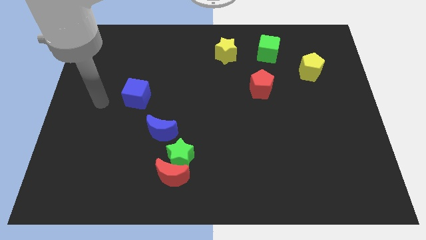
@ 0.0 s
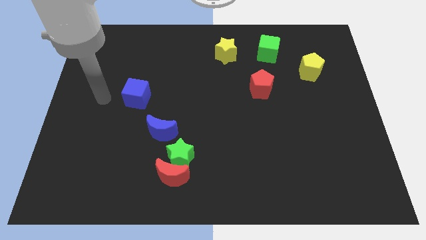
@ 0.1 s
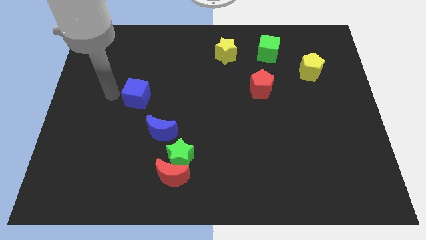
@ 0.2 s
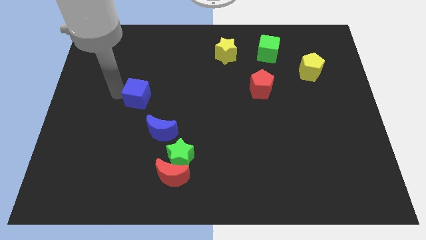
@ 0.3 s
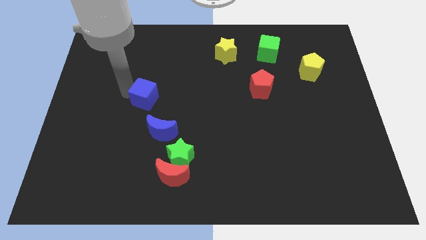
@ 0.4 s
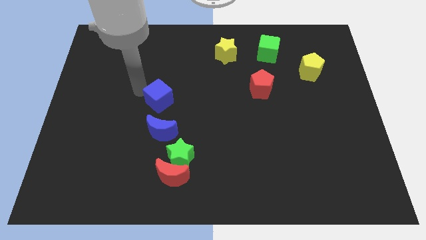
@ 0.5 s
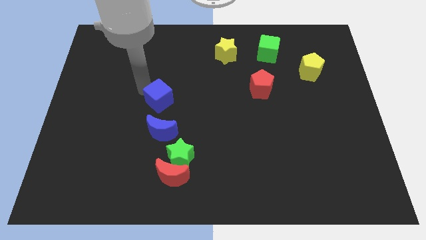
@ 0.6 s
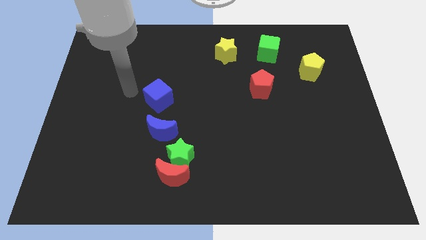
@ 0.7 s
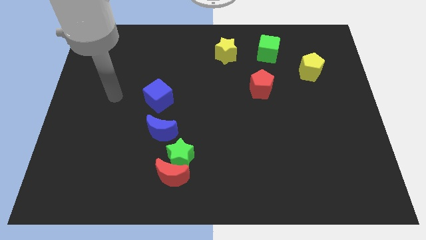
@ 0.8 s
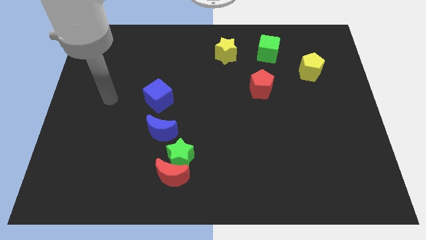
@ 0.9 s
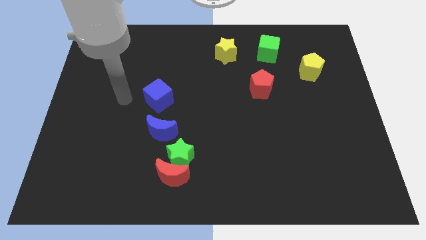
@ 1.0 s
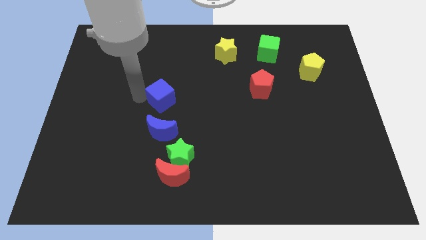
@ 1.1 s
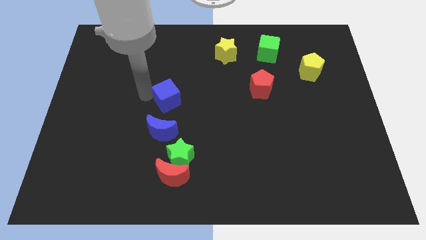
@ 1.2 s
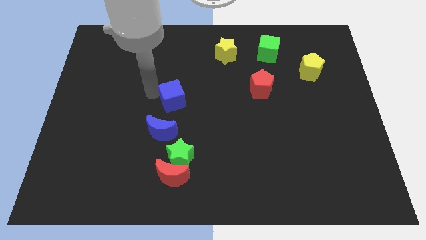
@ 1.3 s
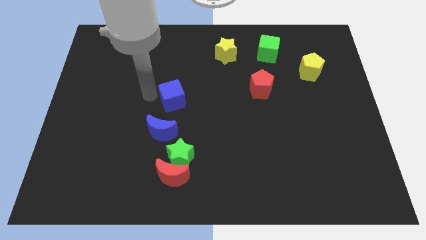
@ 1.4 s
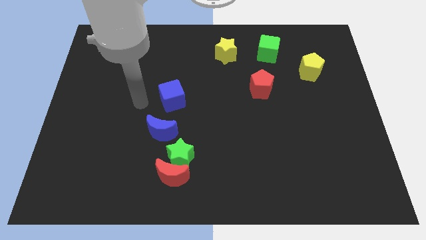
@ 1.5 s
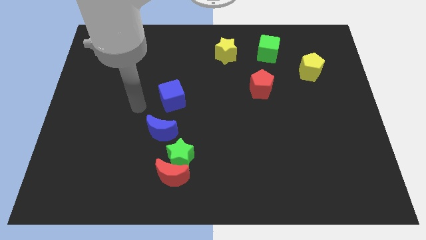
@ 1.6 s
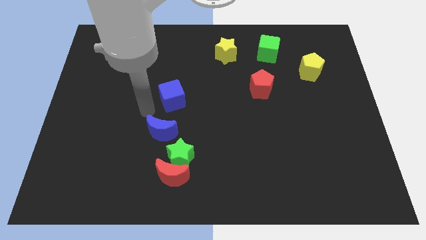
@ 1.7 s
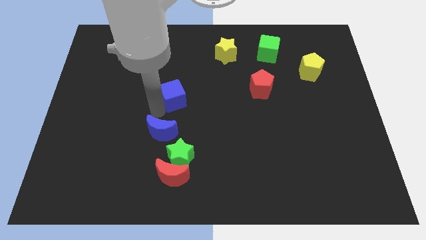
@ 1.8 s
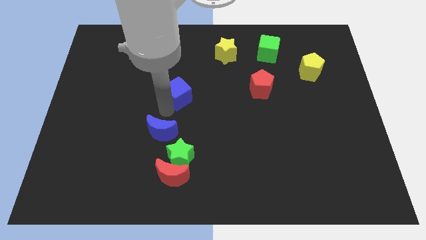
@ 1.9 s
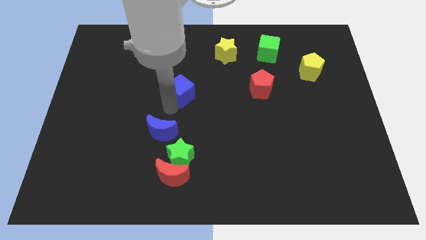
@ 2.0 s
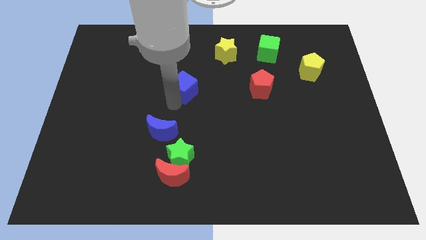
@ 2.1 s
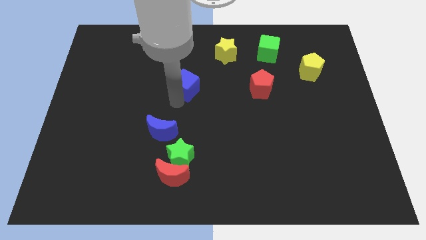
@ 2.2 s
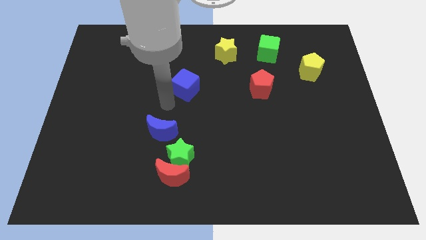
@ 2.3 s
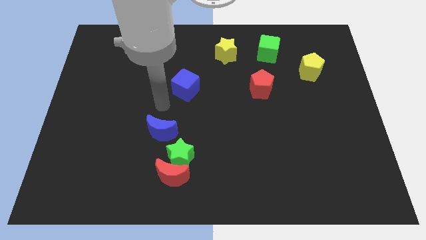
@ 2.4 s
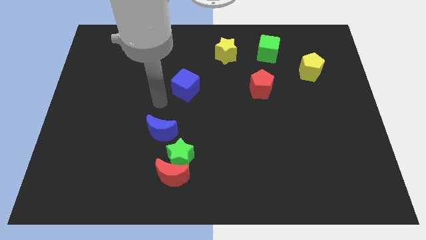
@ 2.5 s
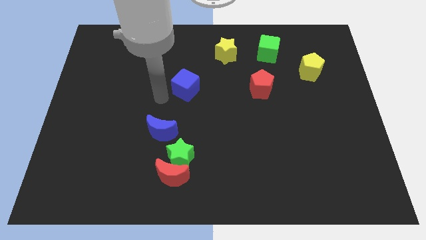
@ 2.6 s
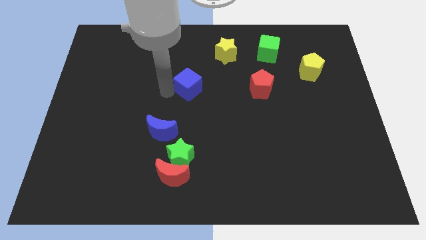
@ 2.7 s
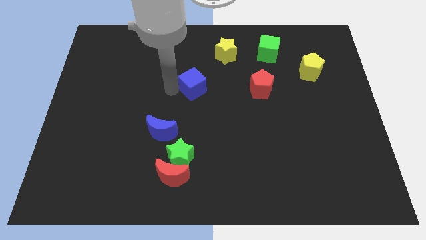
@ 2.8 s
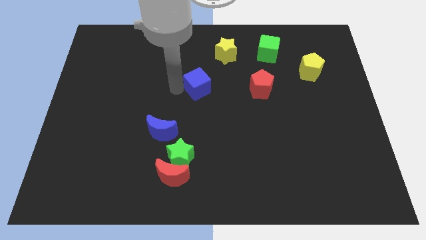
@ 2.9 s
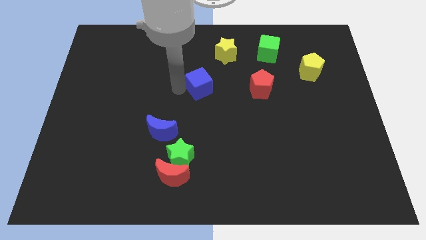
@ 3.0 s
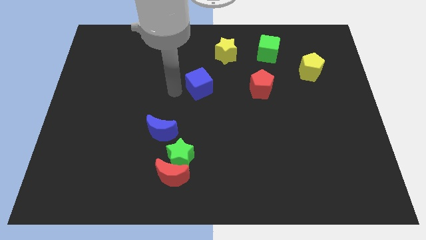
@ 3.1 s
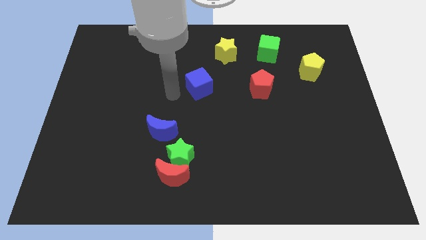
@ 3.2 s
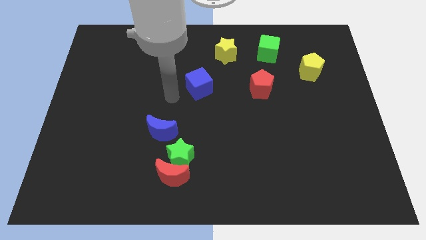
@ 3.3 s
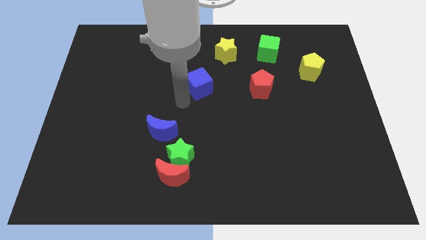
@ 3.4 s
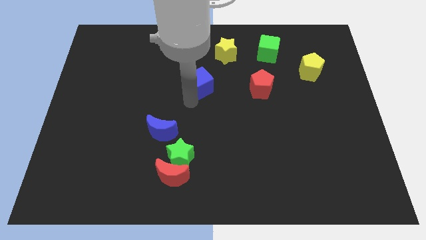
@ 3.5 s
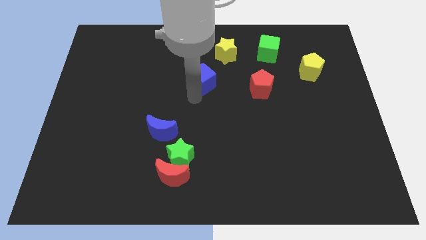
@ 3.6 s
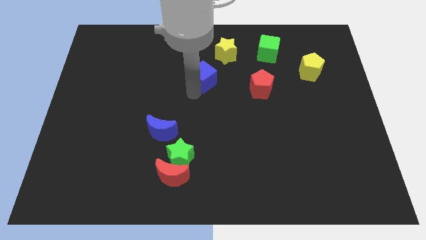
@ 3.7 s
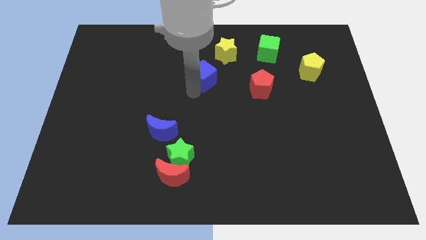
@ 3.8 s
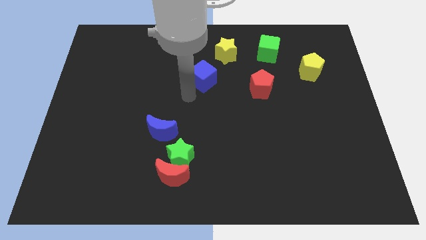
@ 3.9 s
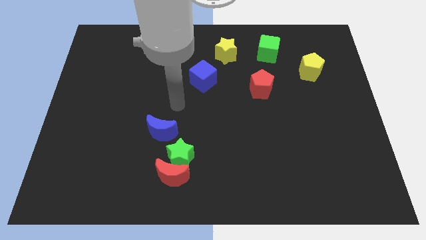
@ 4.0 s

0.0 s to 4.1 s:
move the blue cube to the bottom left of the yellow star

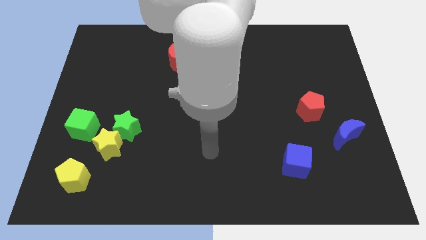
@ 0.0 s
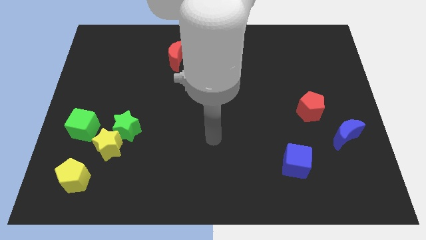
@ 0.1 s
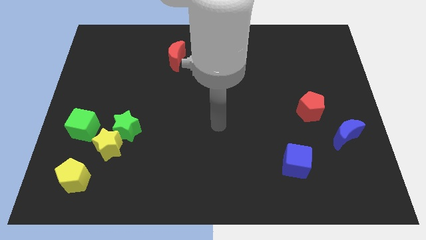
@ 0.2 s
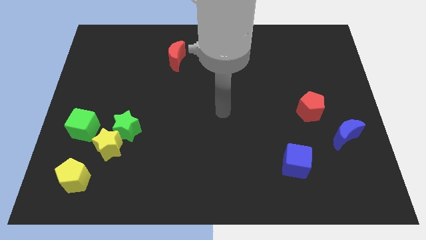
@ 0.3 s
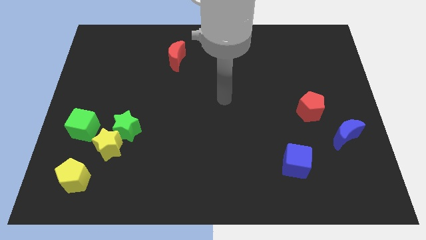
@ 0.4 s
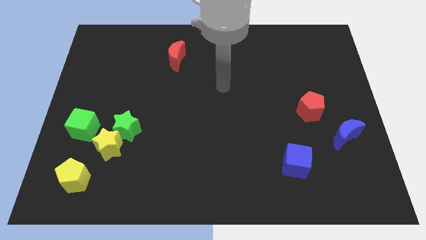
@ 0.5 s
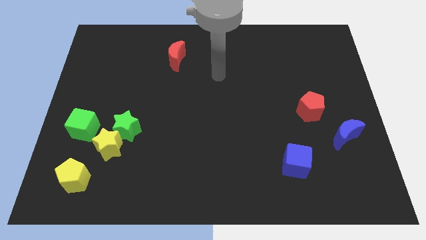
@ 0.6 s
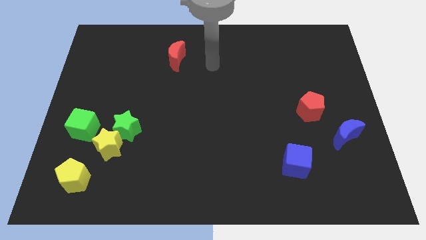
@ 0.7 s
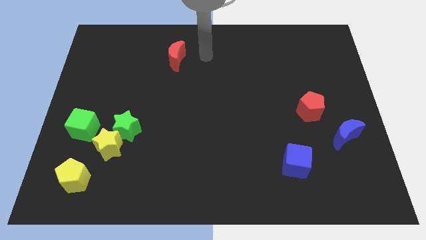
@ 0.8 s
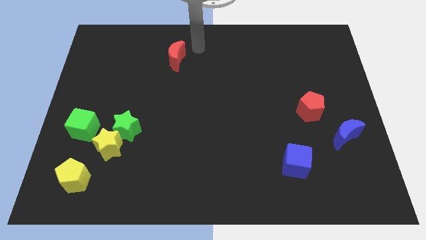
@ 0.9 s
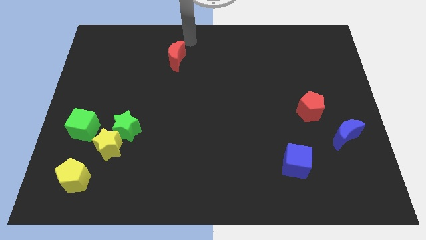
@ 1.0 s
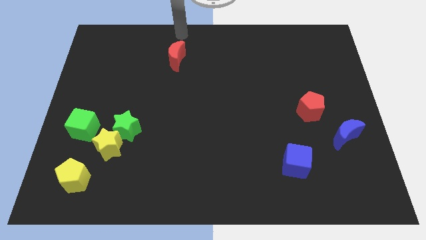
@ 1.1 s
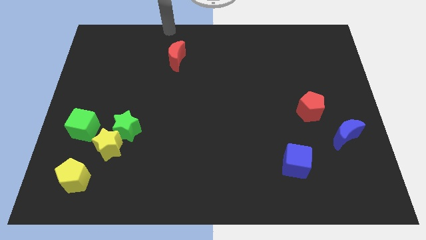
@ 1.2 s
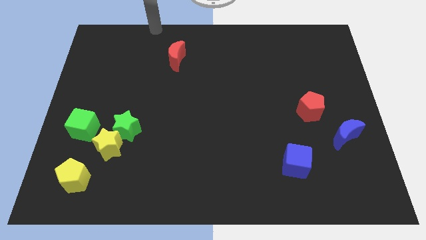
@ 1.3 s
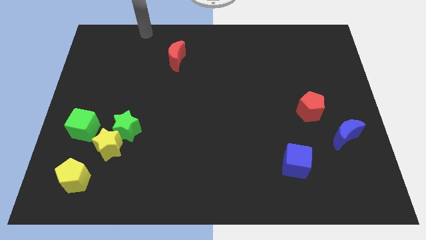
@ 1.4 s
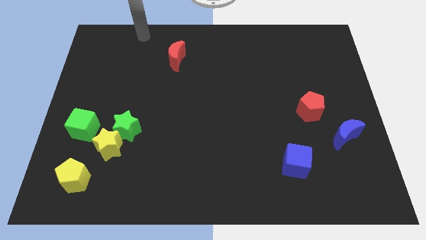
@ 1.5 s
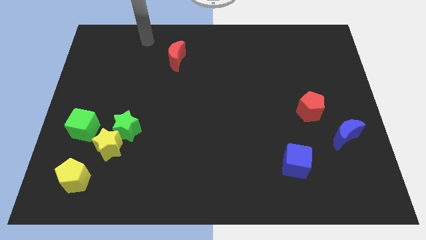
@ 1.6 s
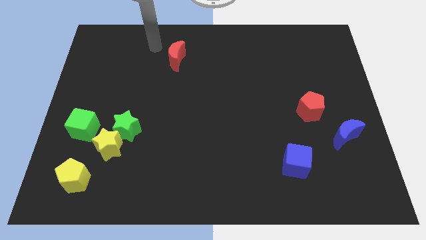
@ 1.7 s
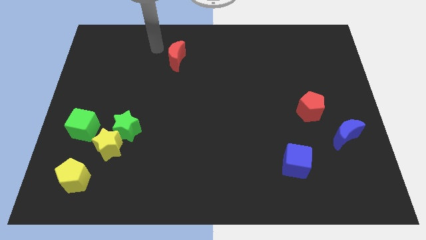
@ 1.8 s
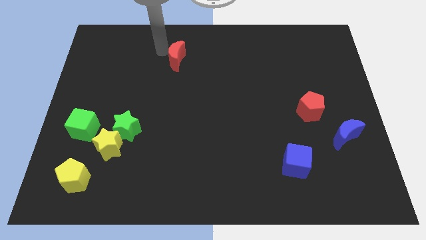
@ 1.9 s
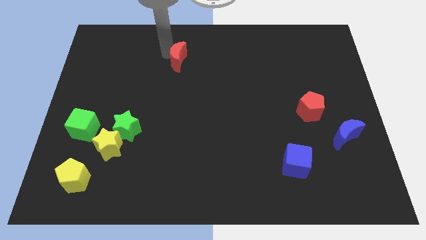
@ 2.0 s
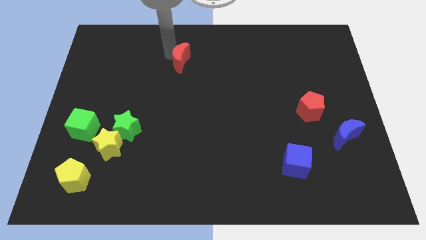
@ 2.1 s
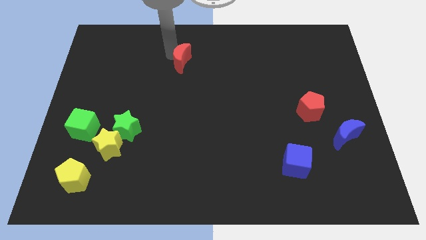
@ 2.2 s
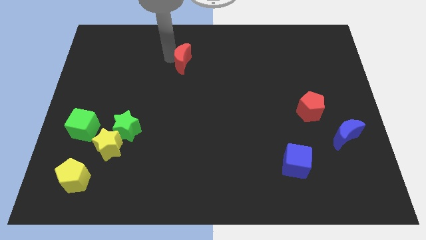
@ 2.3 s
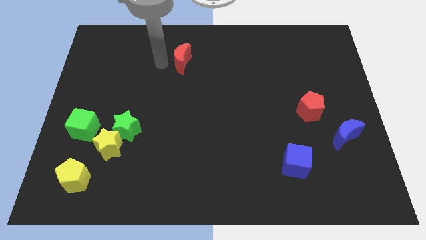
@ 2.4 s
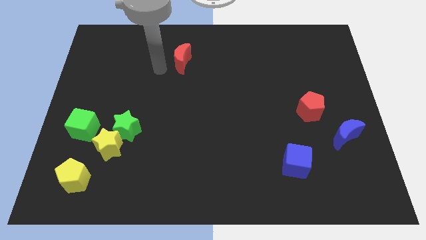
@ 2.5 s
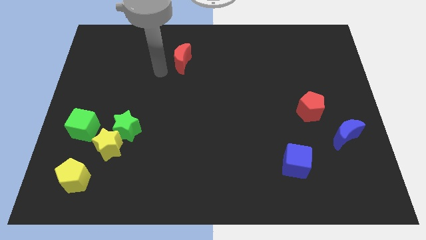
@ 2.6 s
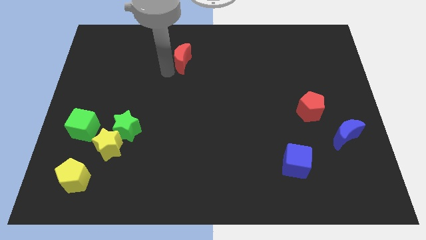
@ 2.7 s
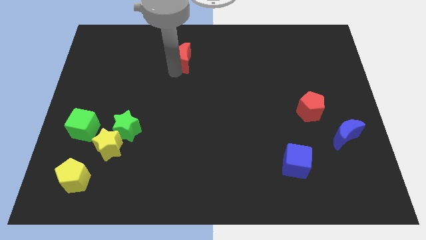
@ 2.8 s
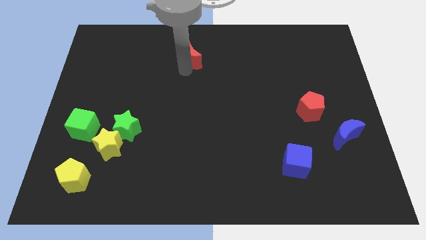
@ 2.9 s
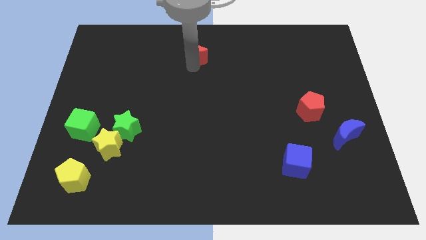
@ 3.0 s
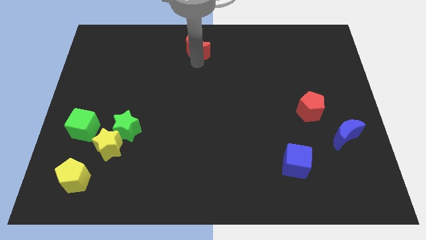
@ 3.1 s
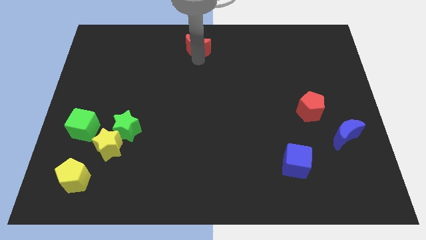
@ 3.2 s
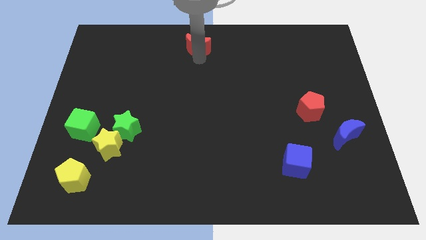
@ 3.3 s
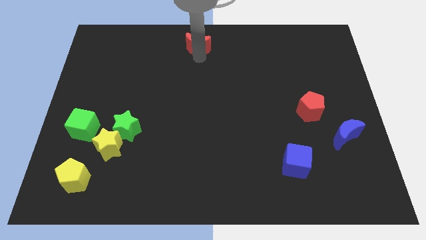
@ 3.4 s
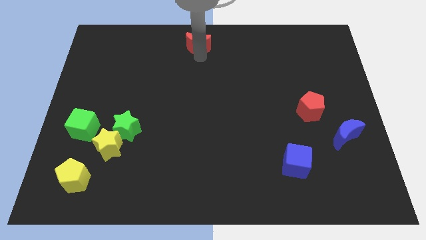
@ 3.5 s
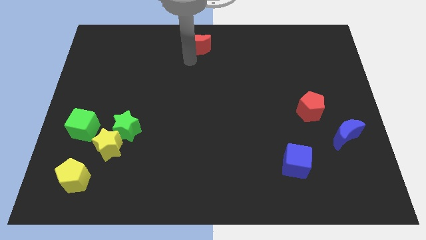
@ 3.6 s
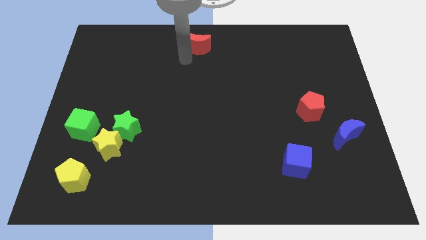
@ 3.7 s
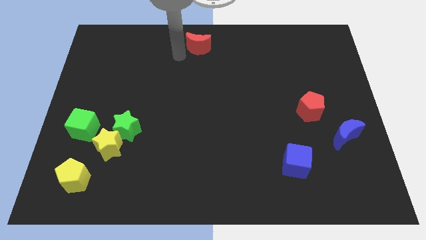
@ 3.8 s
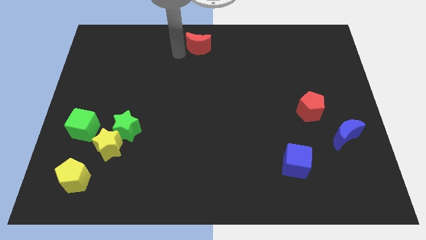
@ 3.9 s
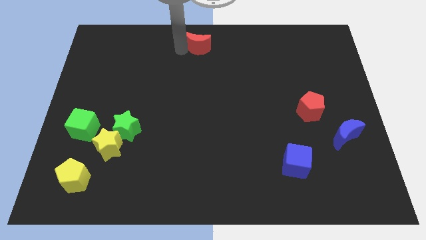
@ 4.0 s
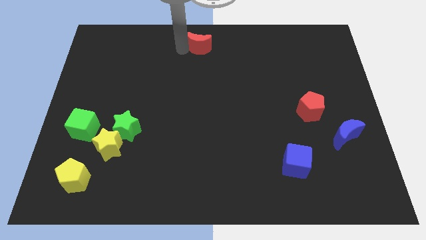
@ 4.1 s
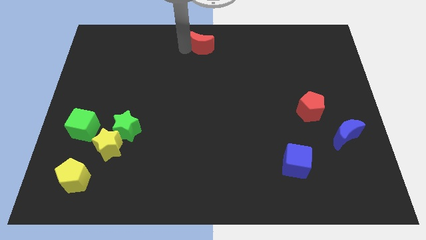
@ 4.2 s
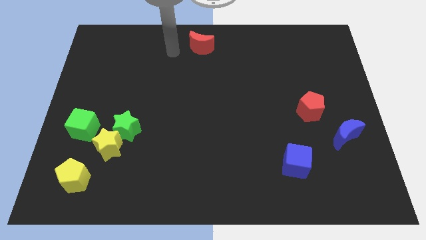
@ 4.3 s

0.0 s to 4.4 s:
move the red crescent to the top center of the board

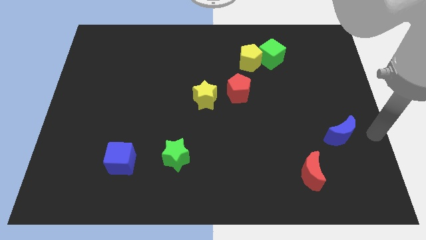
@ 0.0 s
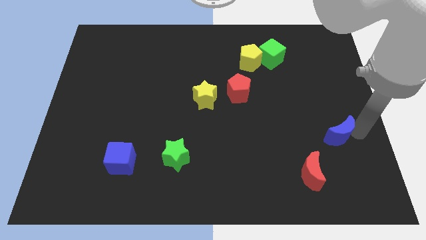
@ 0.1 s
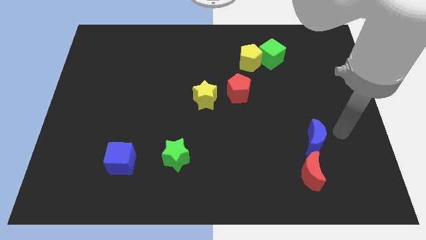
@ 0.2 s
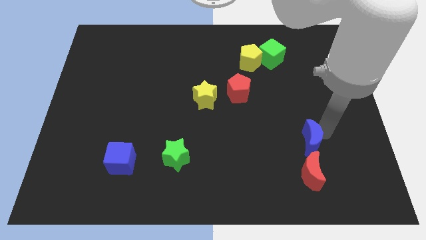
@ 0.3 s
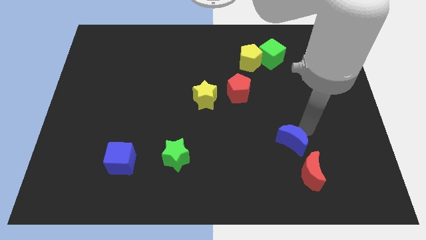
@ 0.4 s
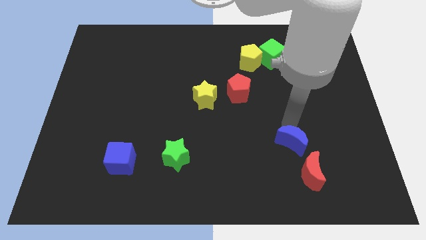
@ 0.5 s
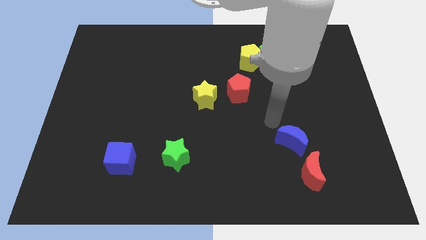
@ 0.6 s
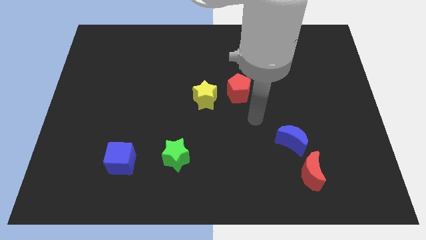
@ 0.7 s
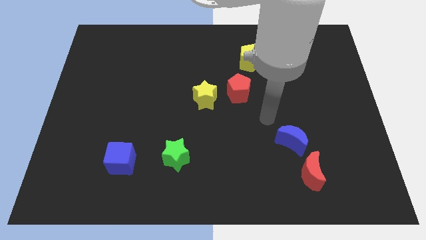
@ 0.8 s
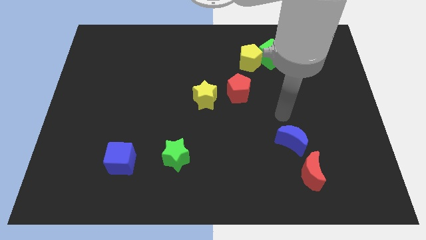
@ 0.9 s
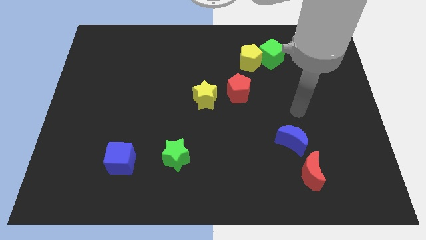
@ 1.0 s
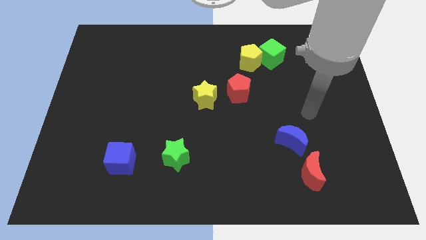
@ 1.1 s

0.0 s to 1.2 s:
slide the blue moon to the top left side of the red moon
